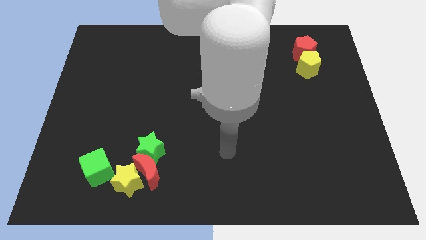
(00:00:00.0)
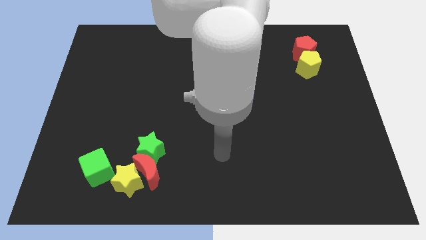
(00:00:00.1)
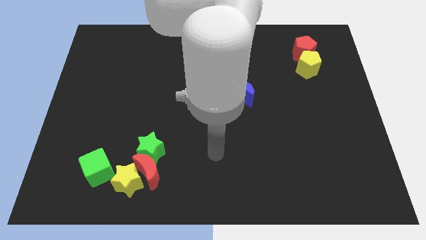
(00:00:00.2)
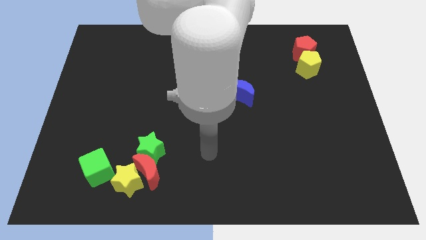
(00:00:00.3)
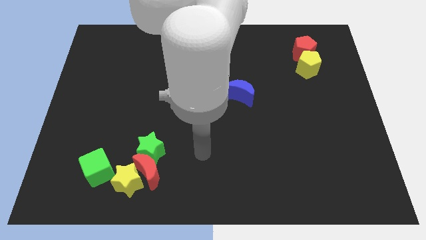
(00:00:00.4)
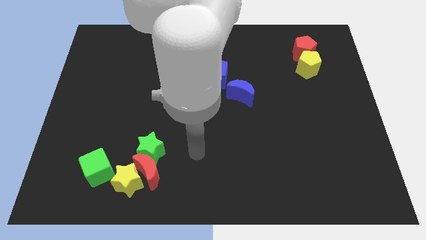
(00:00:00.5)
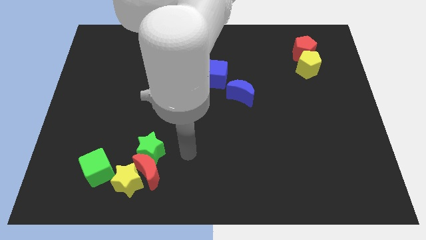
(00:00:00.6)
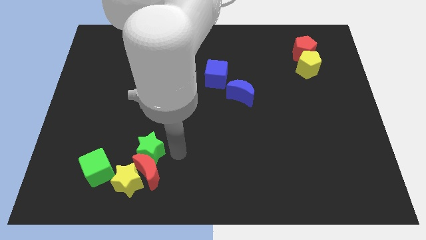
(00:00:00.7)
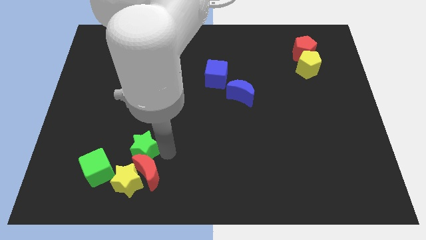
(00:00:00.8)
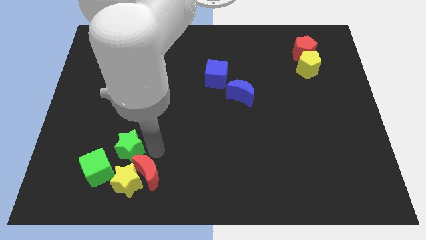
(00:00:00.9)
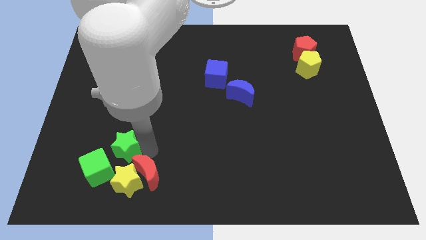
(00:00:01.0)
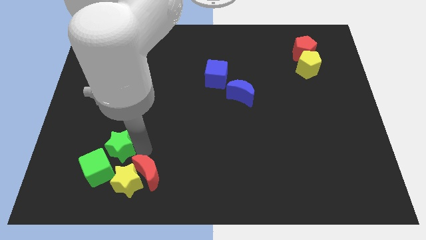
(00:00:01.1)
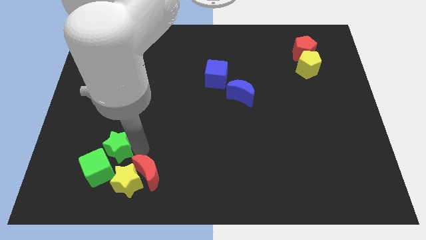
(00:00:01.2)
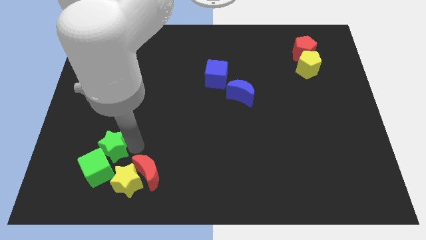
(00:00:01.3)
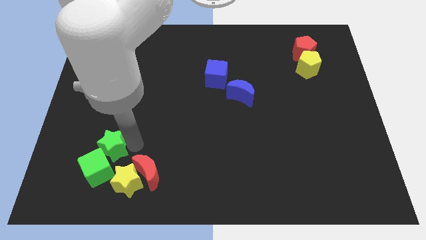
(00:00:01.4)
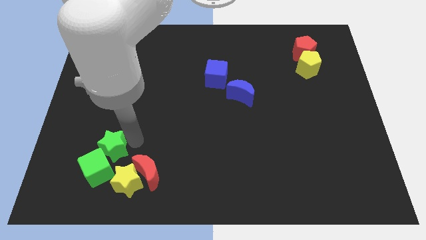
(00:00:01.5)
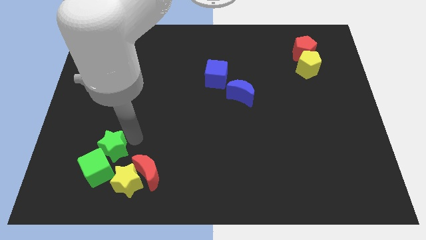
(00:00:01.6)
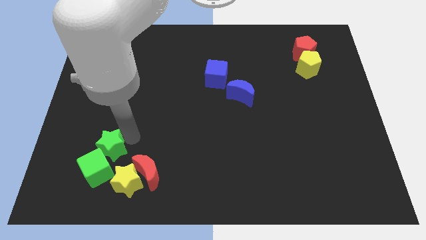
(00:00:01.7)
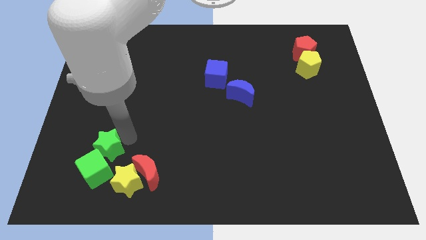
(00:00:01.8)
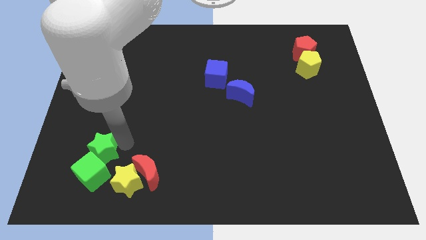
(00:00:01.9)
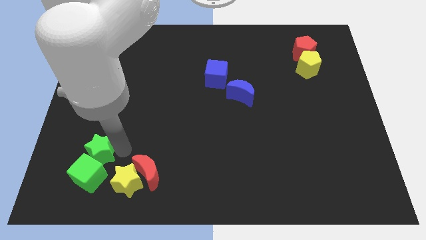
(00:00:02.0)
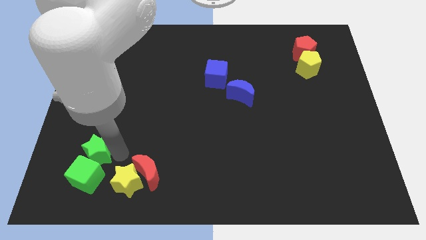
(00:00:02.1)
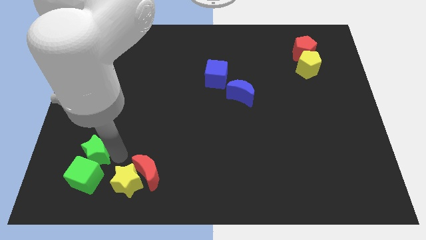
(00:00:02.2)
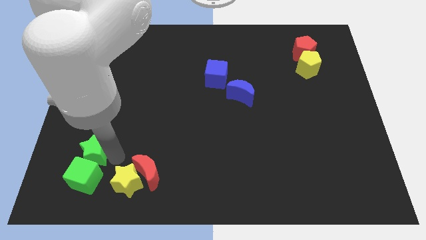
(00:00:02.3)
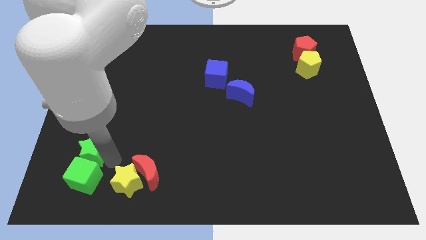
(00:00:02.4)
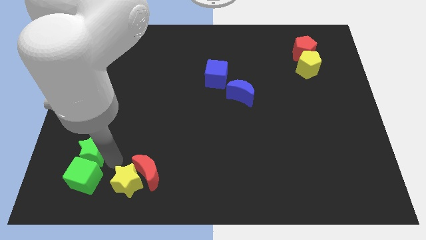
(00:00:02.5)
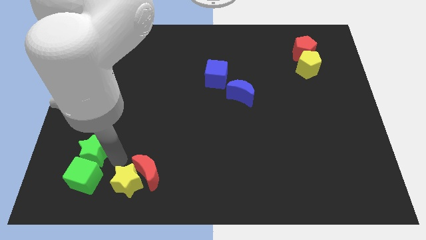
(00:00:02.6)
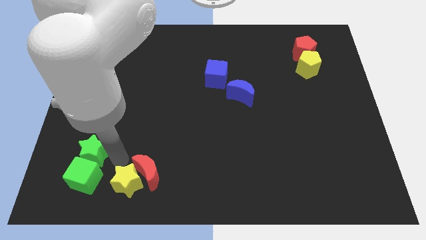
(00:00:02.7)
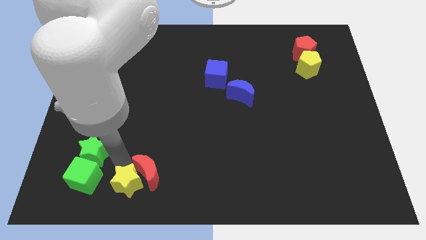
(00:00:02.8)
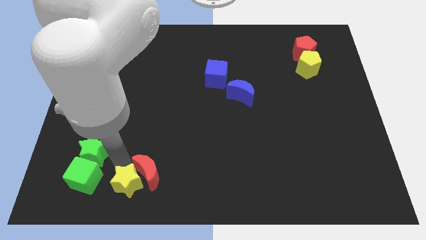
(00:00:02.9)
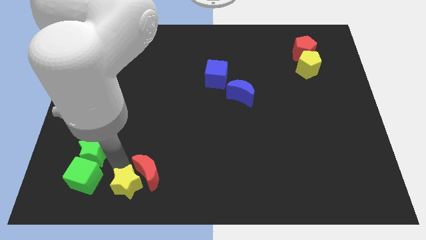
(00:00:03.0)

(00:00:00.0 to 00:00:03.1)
push the green star into green cube

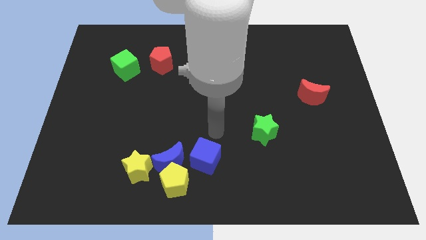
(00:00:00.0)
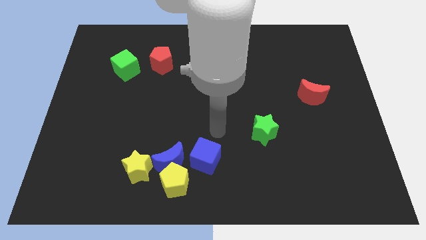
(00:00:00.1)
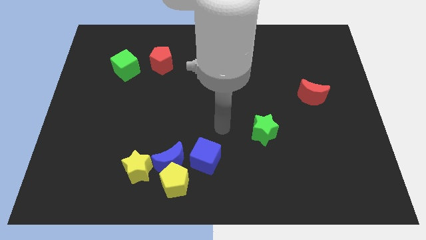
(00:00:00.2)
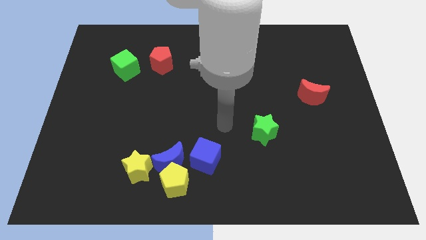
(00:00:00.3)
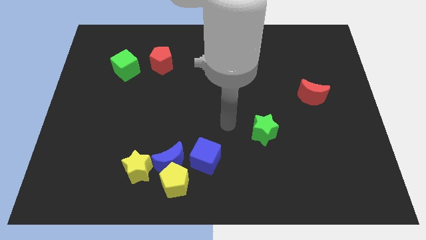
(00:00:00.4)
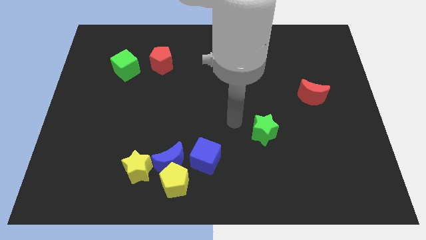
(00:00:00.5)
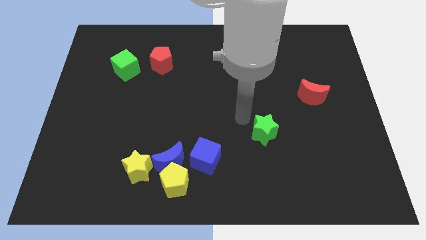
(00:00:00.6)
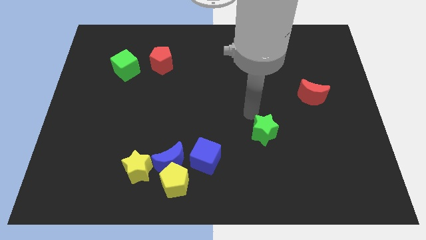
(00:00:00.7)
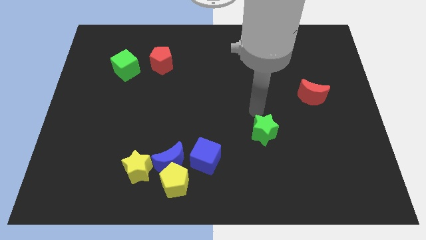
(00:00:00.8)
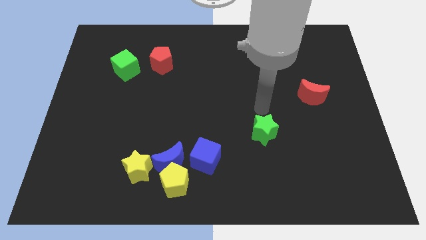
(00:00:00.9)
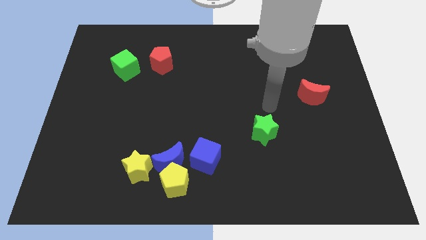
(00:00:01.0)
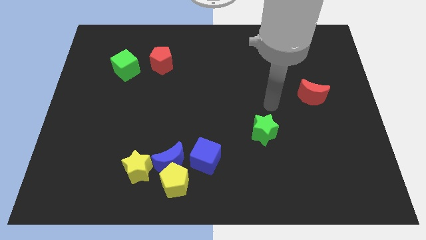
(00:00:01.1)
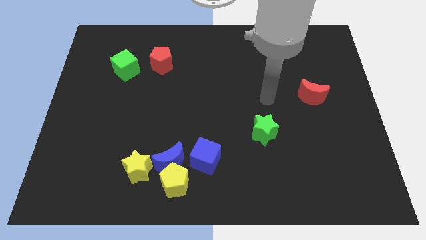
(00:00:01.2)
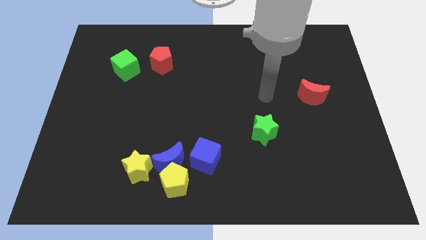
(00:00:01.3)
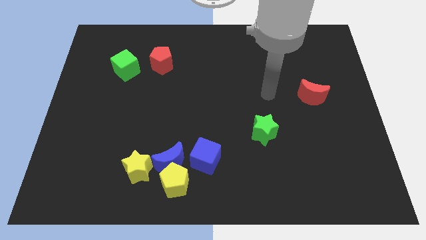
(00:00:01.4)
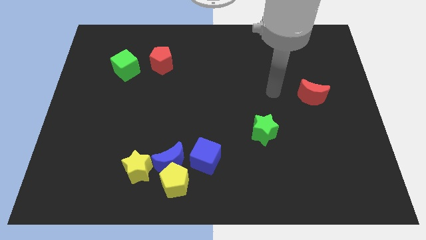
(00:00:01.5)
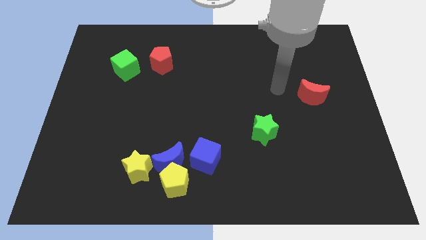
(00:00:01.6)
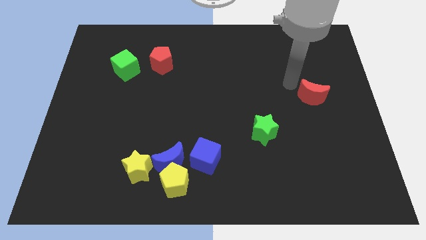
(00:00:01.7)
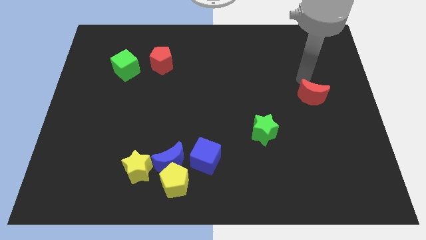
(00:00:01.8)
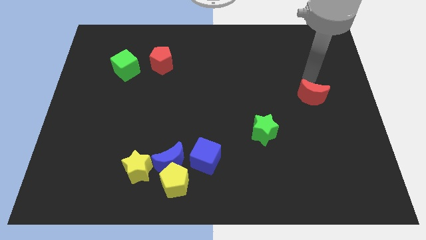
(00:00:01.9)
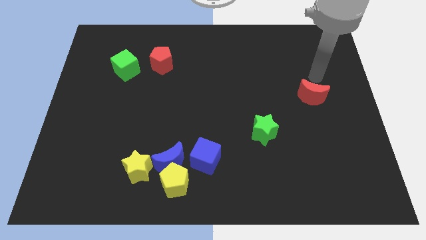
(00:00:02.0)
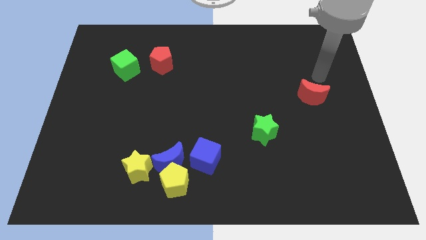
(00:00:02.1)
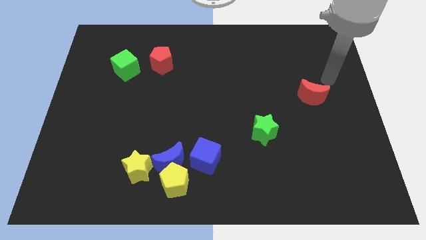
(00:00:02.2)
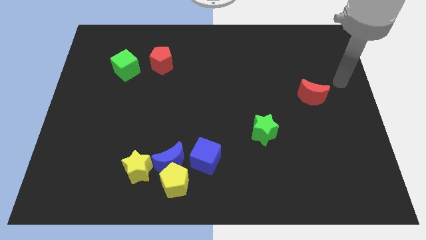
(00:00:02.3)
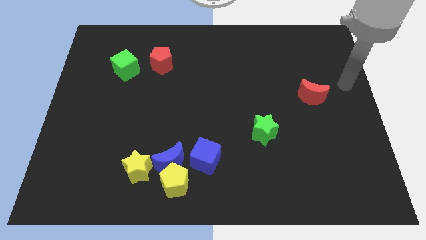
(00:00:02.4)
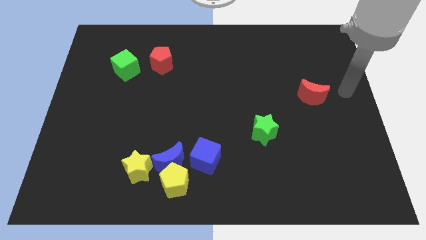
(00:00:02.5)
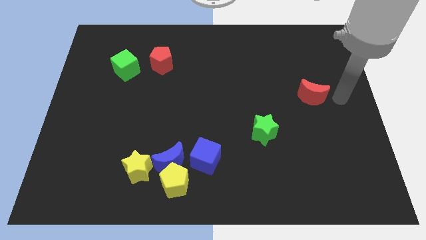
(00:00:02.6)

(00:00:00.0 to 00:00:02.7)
drag your arm towards red crescent

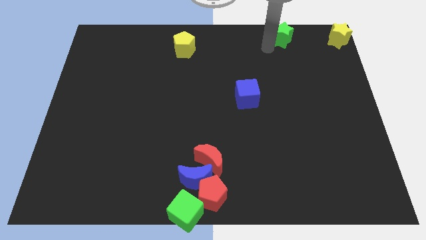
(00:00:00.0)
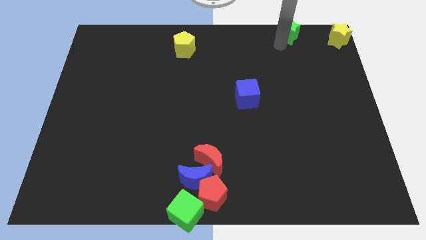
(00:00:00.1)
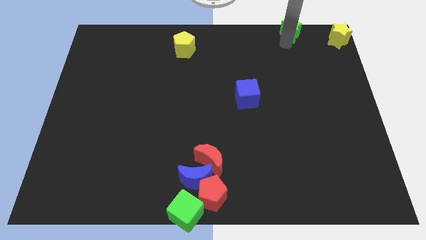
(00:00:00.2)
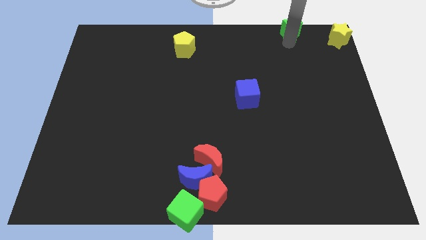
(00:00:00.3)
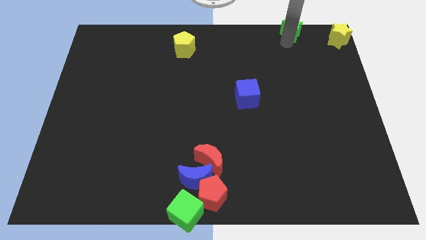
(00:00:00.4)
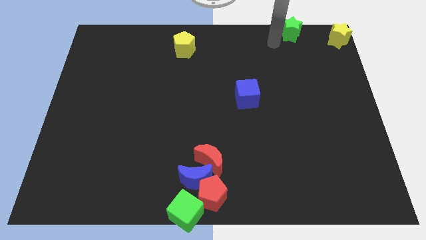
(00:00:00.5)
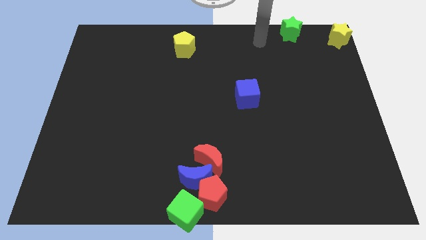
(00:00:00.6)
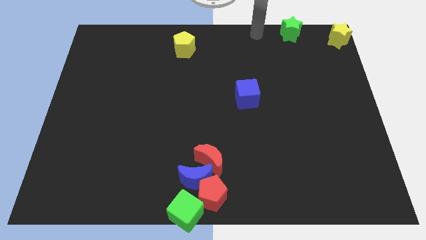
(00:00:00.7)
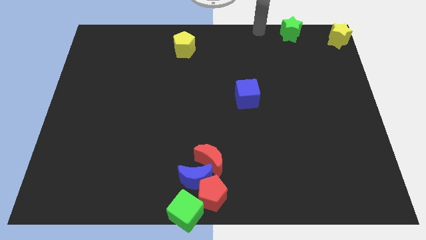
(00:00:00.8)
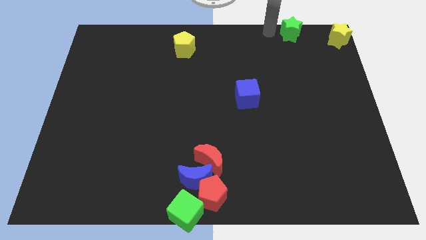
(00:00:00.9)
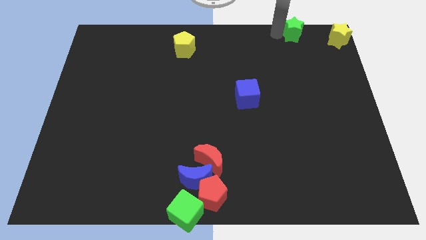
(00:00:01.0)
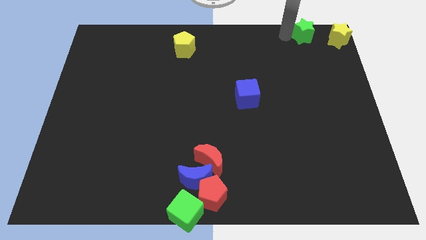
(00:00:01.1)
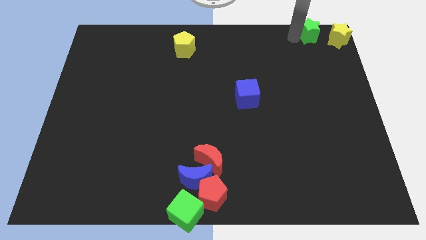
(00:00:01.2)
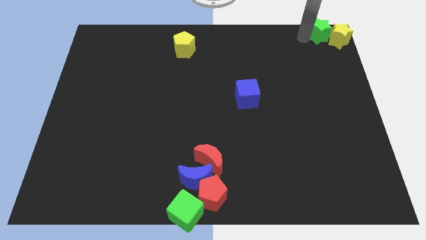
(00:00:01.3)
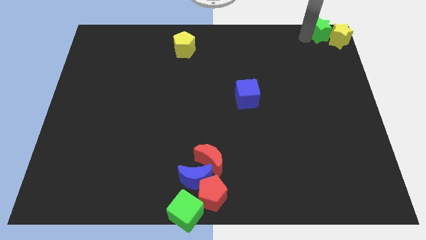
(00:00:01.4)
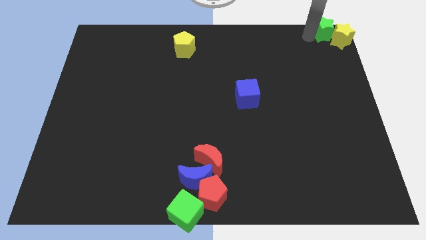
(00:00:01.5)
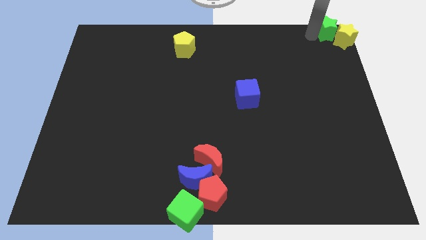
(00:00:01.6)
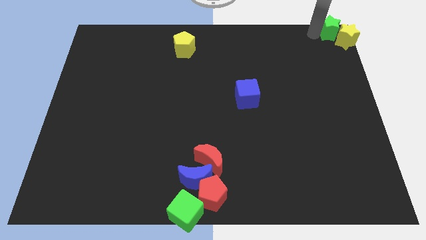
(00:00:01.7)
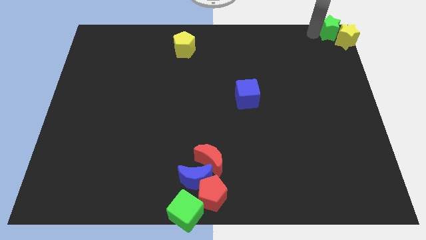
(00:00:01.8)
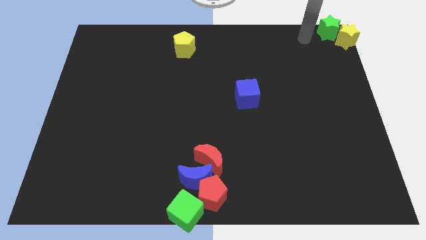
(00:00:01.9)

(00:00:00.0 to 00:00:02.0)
move the green star into the yellow star

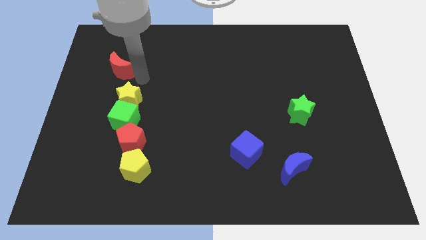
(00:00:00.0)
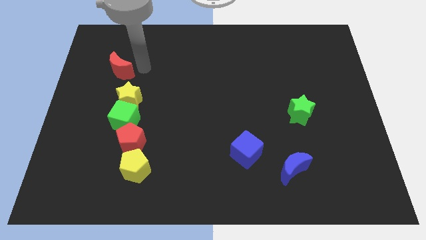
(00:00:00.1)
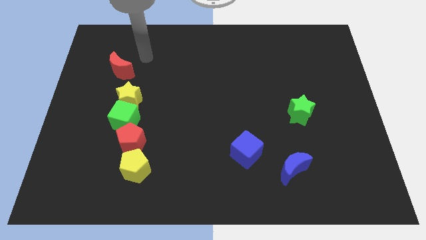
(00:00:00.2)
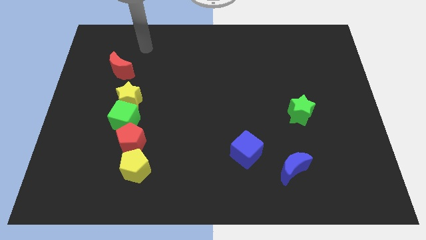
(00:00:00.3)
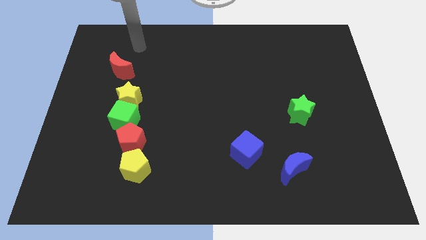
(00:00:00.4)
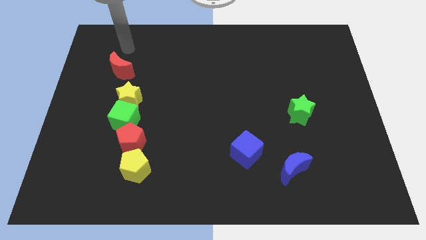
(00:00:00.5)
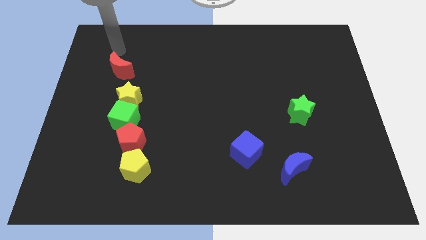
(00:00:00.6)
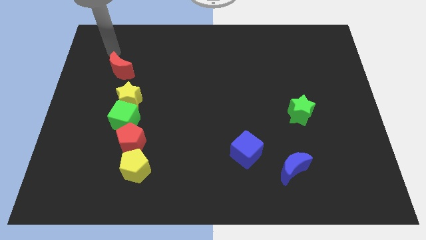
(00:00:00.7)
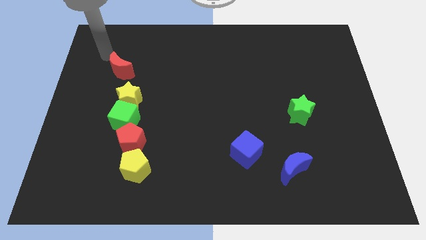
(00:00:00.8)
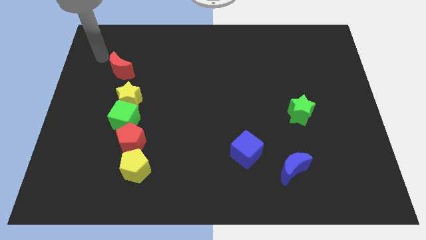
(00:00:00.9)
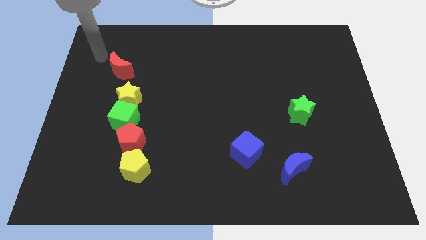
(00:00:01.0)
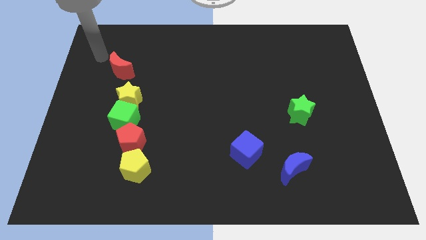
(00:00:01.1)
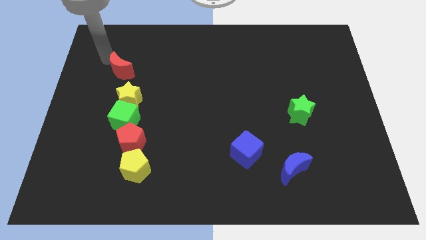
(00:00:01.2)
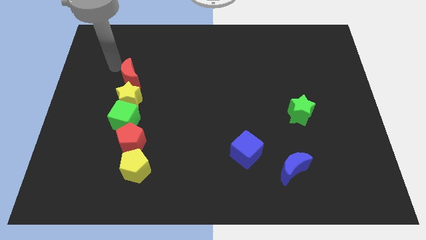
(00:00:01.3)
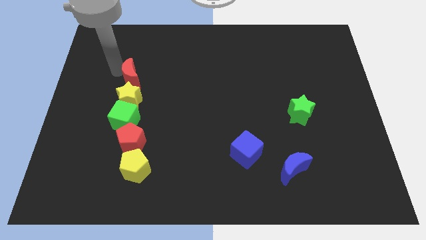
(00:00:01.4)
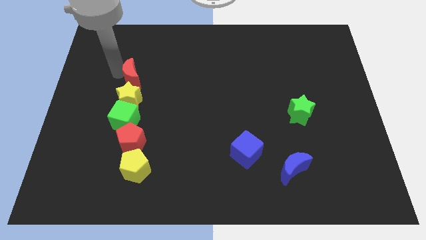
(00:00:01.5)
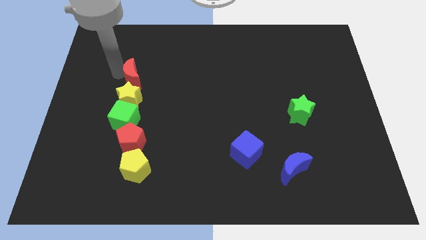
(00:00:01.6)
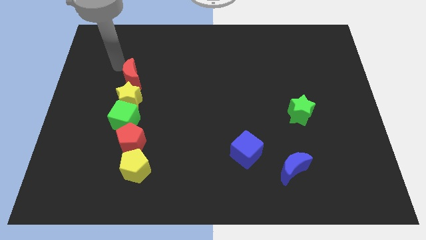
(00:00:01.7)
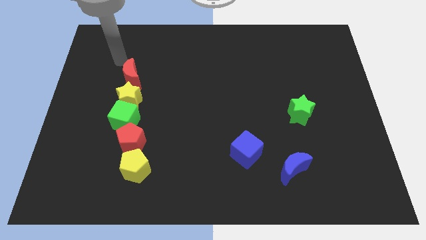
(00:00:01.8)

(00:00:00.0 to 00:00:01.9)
push red moon close to yellow star
